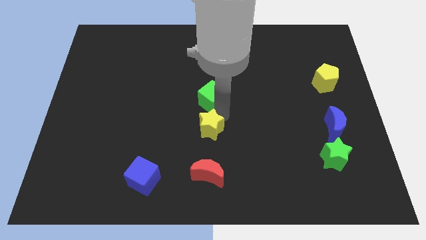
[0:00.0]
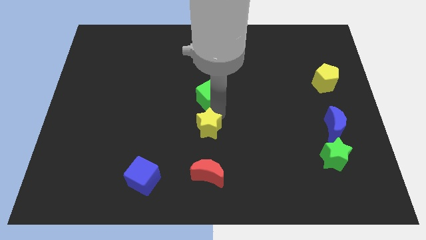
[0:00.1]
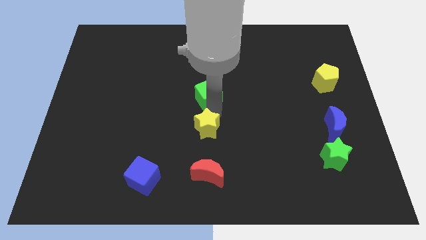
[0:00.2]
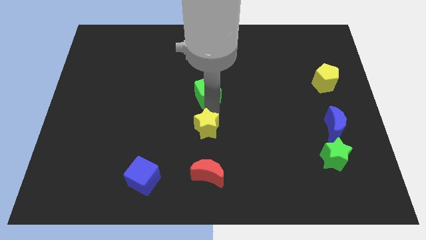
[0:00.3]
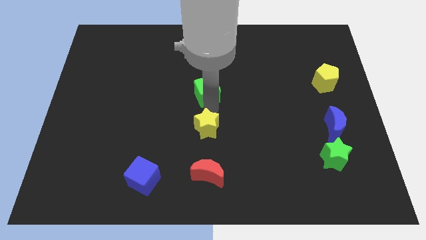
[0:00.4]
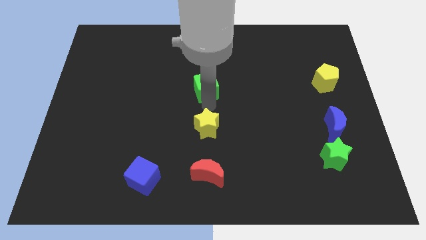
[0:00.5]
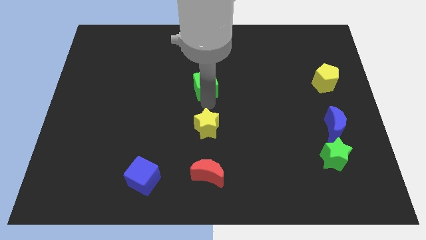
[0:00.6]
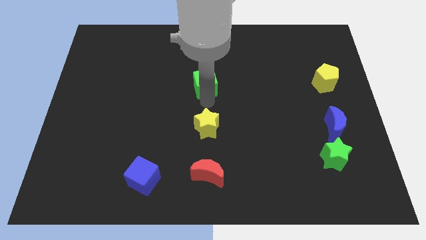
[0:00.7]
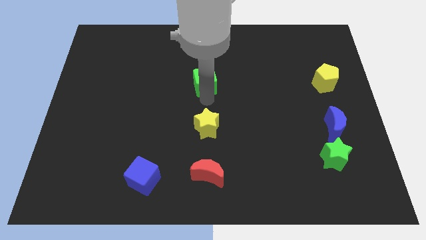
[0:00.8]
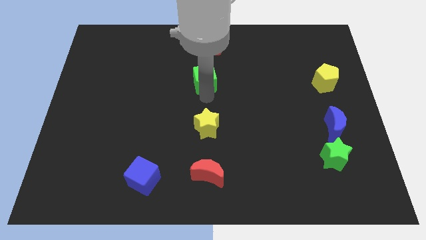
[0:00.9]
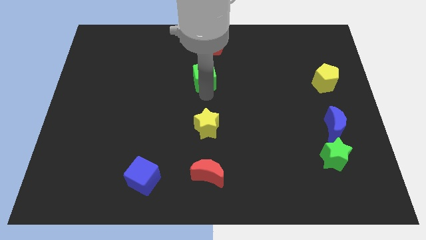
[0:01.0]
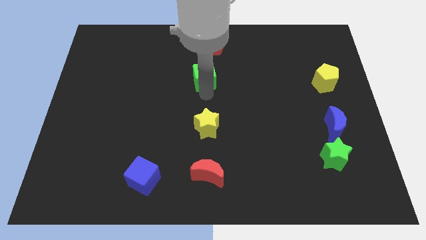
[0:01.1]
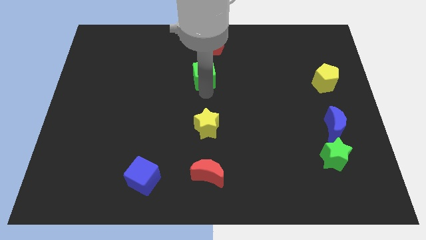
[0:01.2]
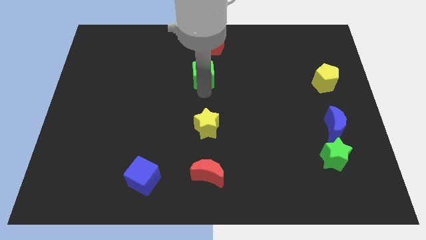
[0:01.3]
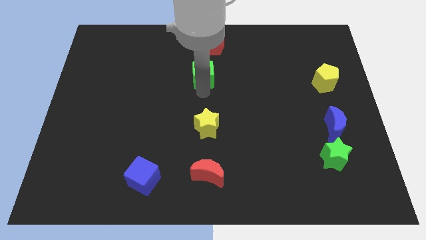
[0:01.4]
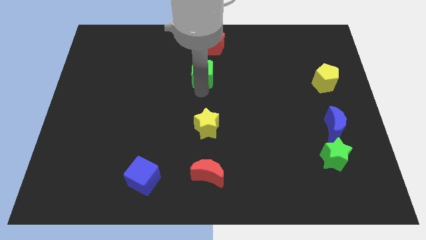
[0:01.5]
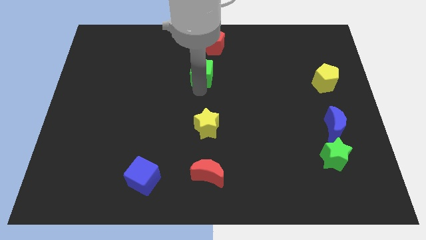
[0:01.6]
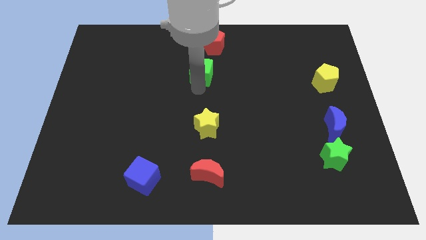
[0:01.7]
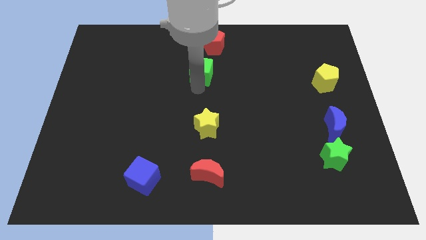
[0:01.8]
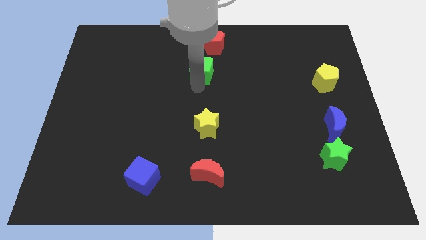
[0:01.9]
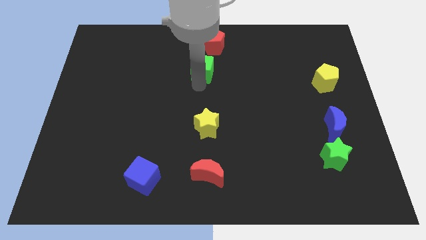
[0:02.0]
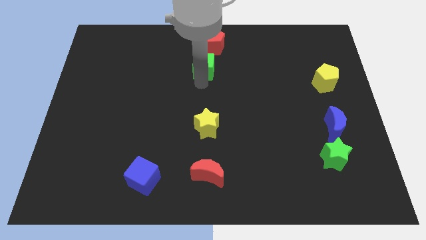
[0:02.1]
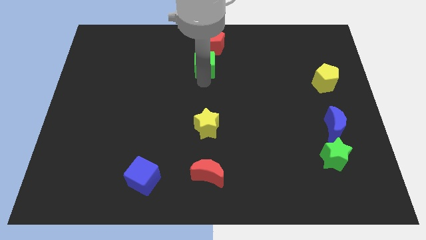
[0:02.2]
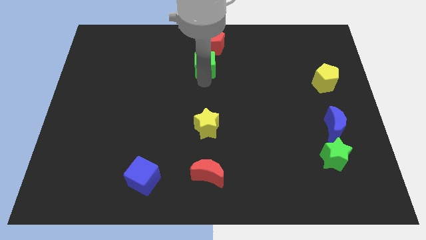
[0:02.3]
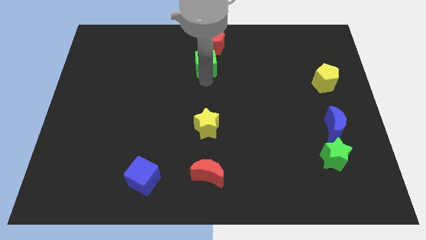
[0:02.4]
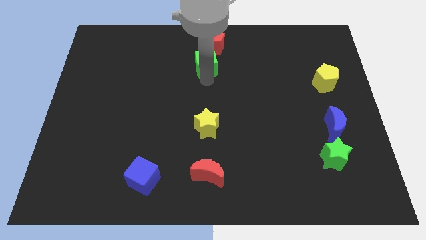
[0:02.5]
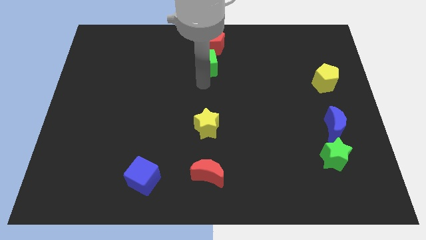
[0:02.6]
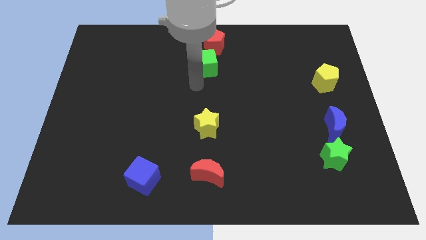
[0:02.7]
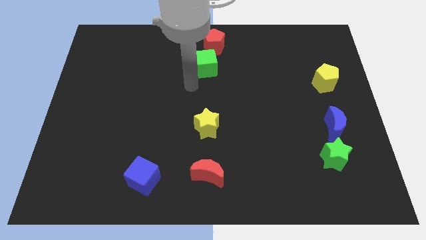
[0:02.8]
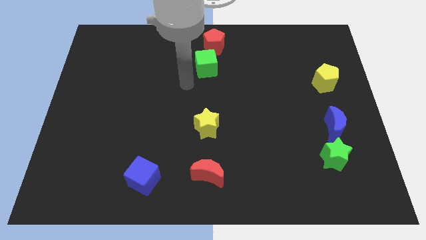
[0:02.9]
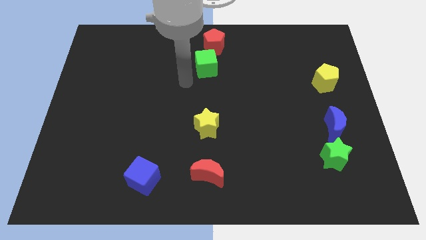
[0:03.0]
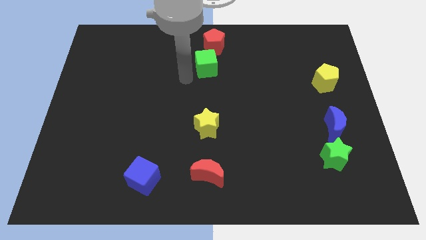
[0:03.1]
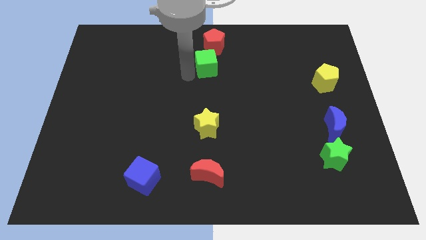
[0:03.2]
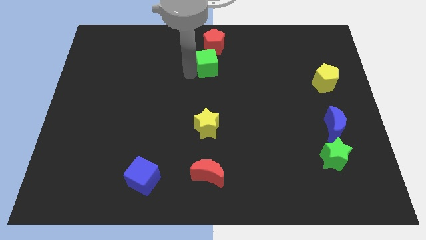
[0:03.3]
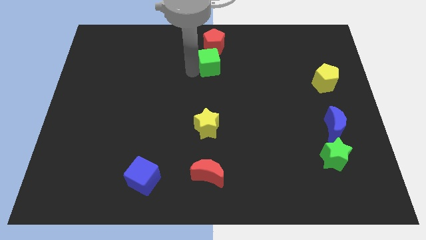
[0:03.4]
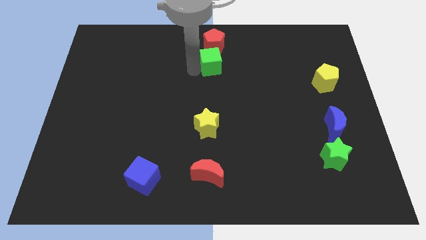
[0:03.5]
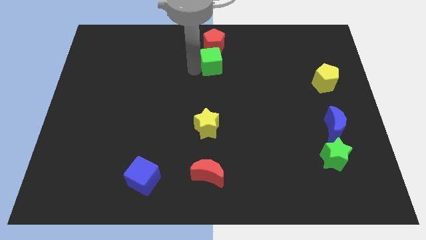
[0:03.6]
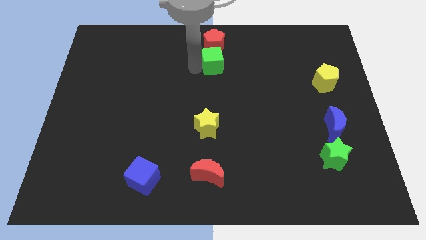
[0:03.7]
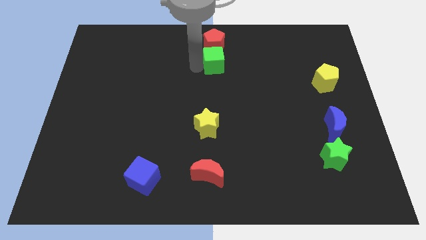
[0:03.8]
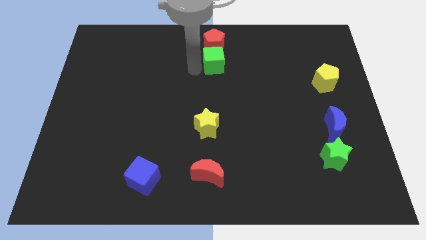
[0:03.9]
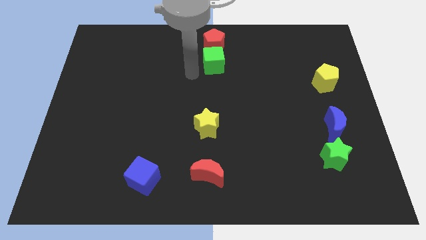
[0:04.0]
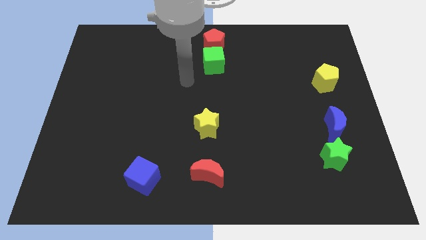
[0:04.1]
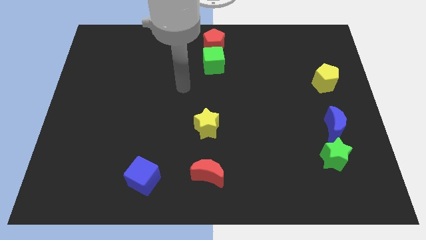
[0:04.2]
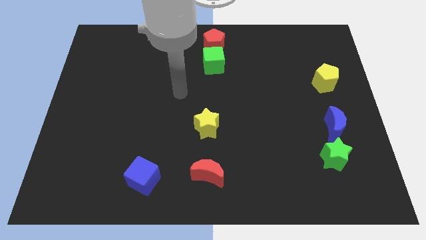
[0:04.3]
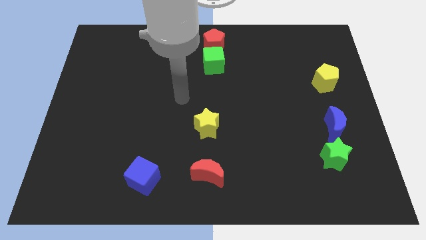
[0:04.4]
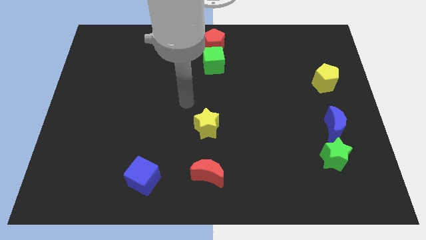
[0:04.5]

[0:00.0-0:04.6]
push the green cube to the bottom of the red pentagon

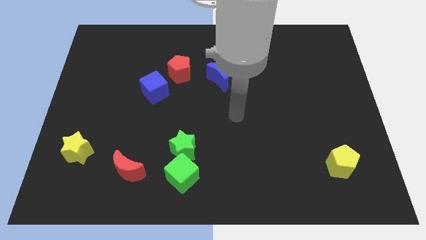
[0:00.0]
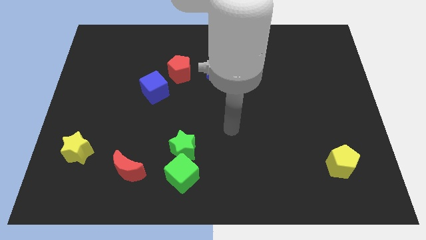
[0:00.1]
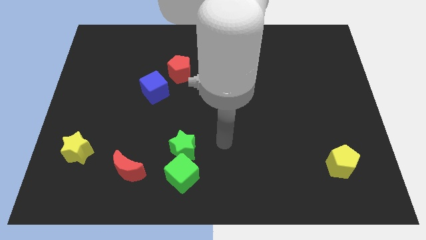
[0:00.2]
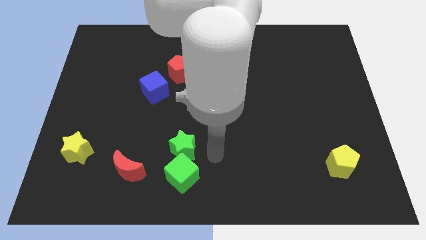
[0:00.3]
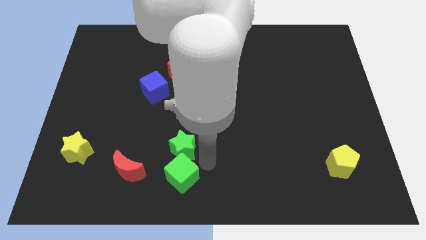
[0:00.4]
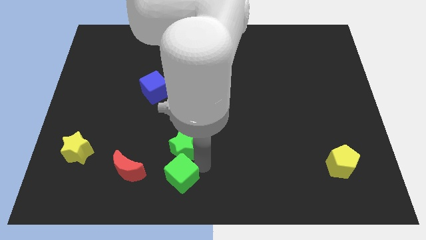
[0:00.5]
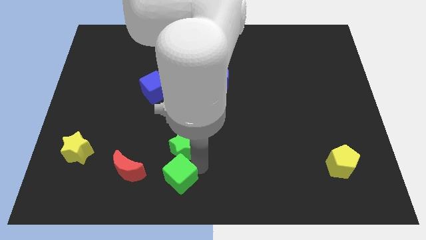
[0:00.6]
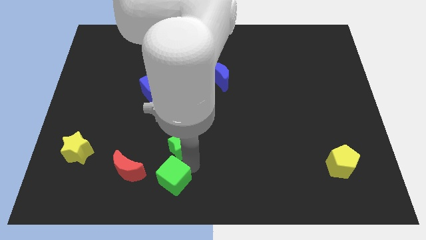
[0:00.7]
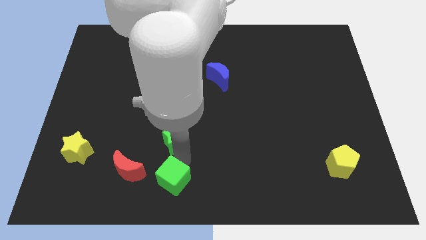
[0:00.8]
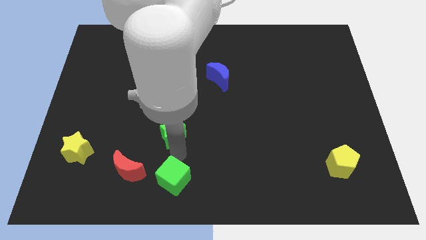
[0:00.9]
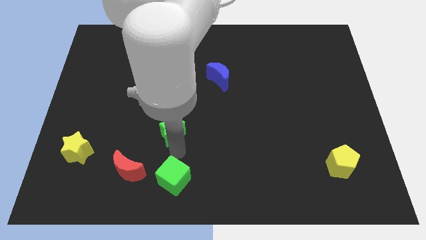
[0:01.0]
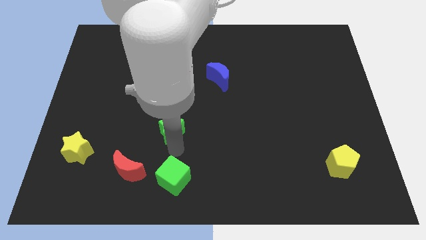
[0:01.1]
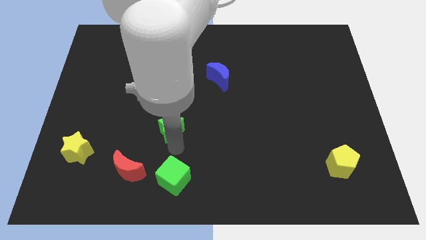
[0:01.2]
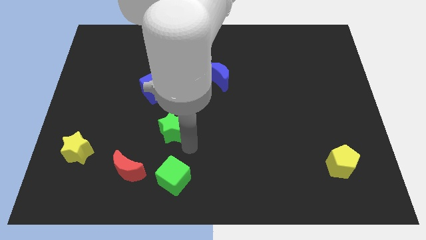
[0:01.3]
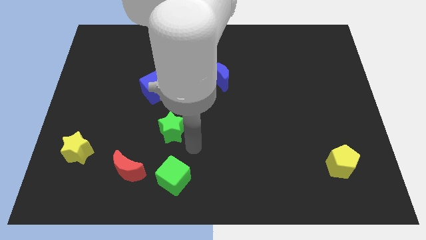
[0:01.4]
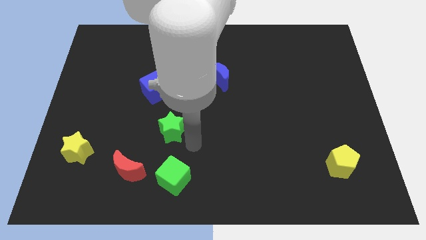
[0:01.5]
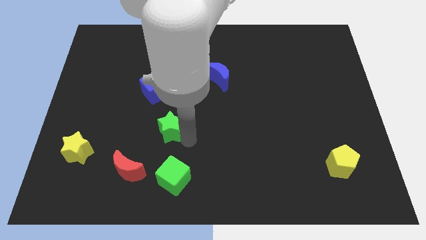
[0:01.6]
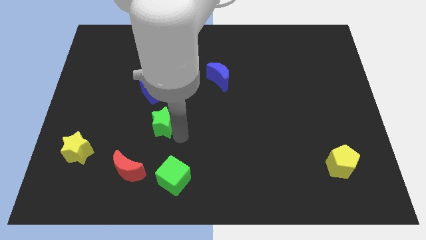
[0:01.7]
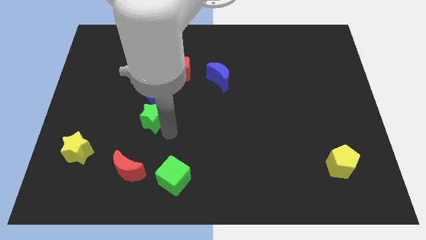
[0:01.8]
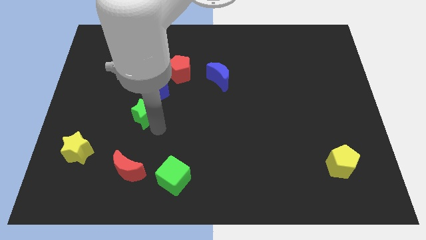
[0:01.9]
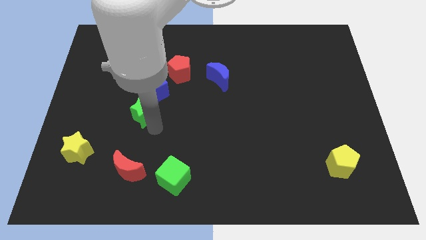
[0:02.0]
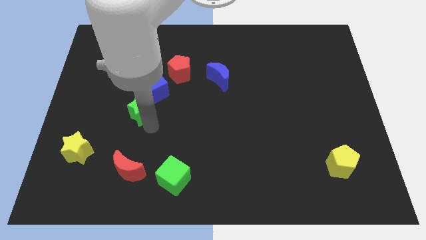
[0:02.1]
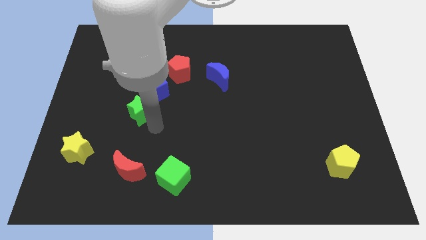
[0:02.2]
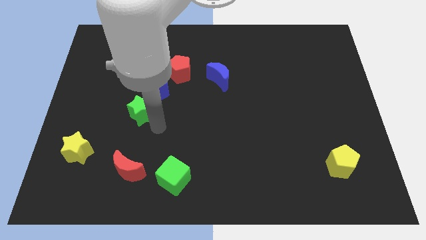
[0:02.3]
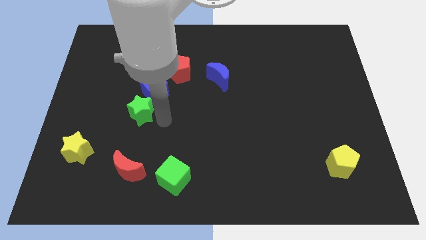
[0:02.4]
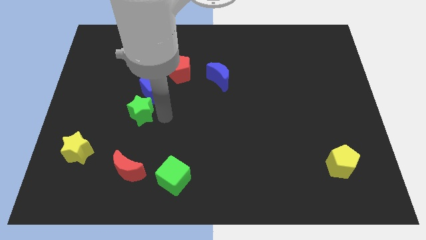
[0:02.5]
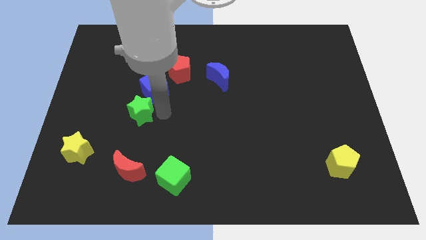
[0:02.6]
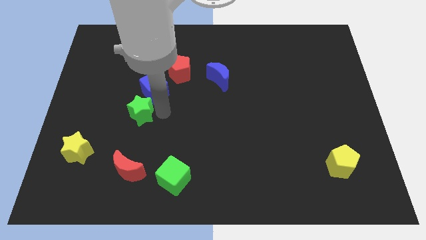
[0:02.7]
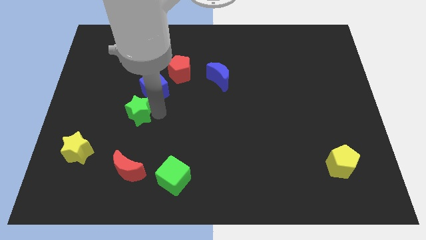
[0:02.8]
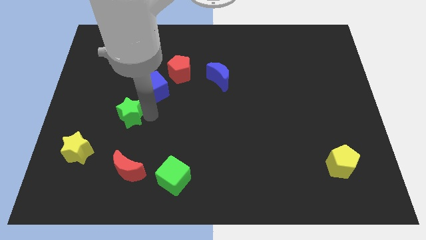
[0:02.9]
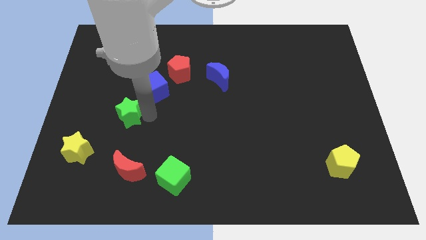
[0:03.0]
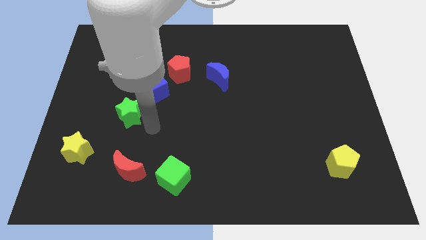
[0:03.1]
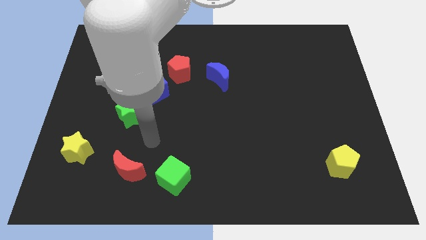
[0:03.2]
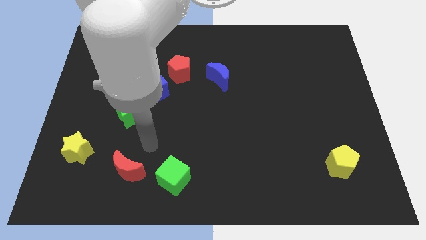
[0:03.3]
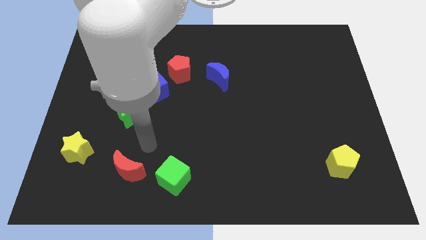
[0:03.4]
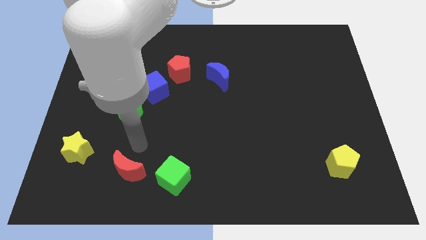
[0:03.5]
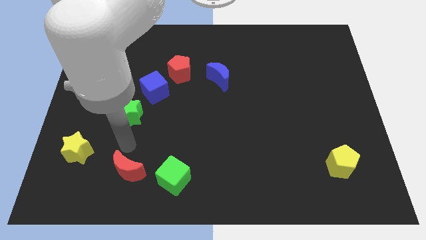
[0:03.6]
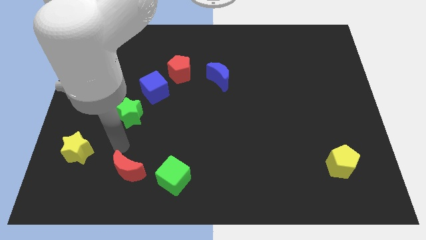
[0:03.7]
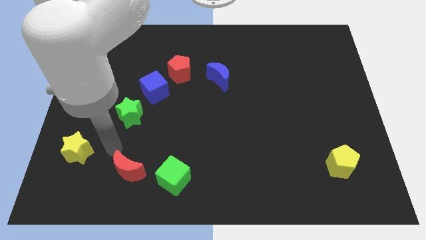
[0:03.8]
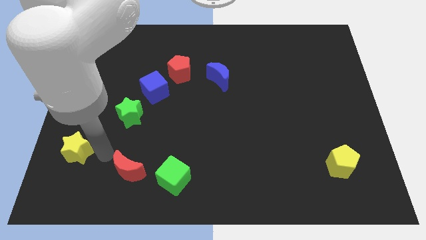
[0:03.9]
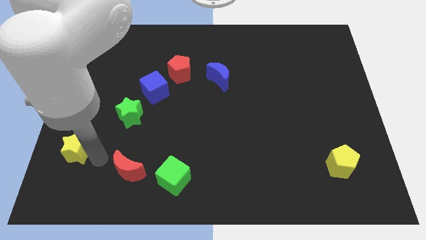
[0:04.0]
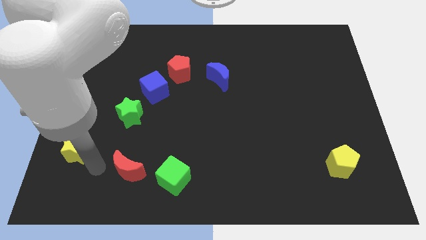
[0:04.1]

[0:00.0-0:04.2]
separate the green star from the green cube
